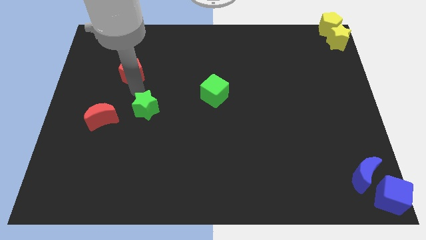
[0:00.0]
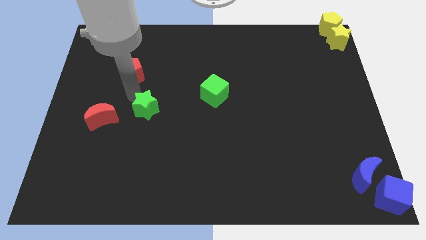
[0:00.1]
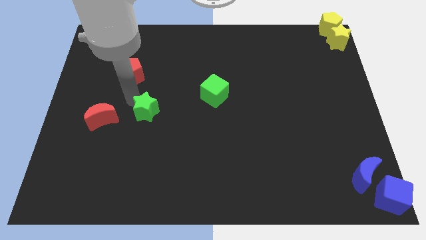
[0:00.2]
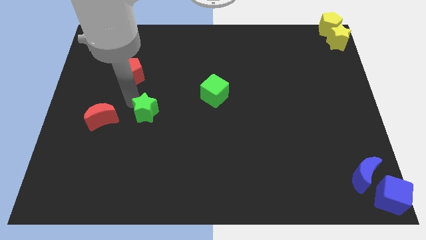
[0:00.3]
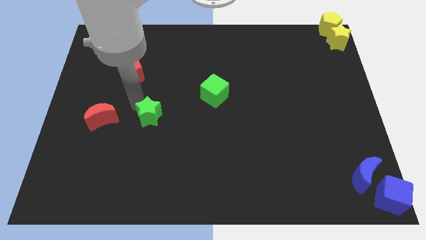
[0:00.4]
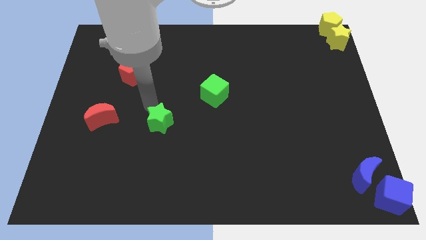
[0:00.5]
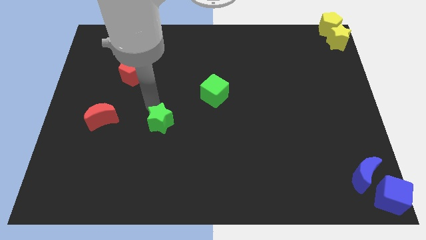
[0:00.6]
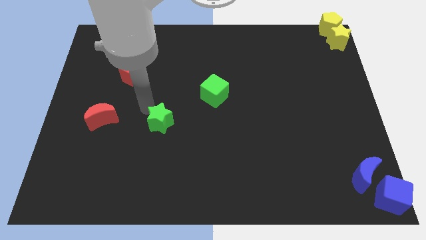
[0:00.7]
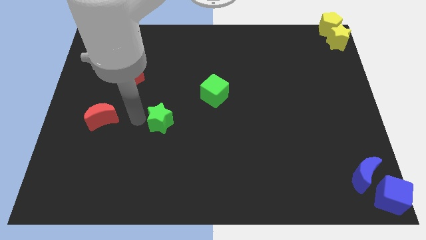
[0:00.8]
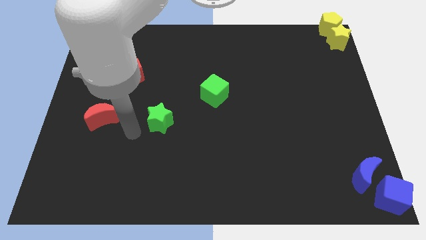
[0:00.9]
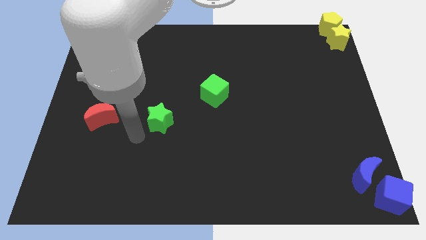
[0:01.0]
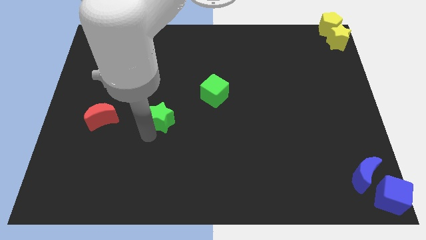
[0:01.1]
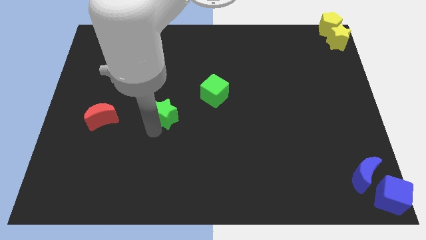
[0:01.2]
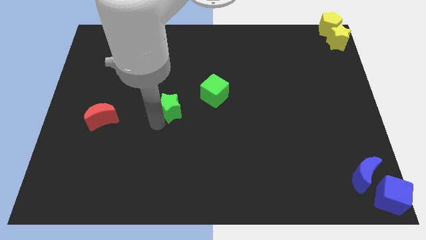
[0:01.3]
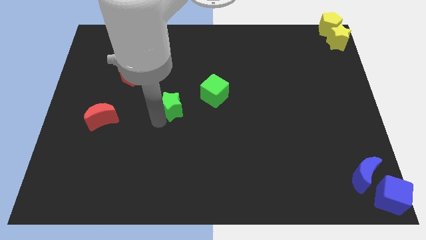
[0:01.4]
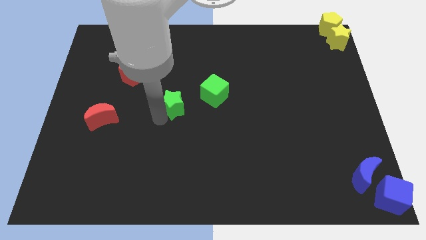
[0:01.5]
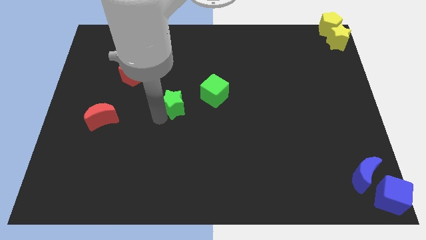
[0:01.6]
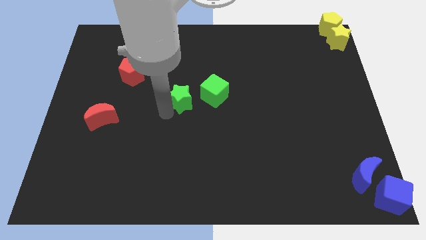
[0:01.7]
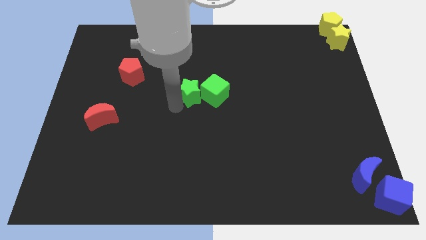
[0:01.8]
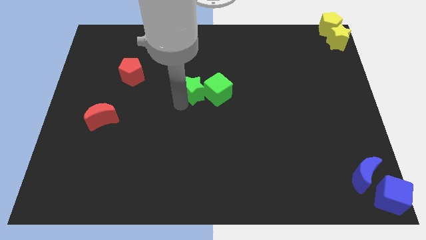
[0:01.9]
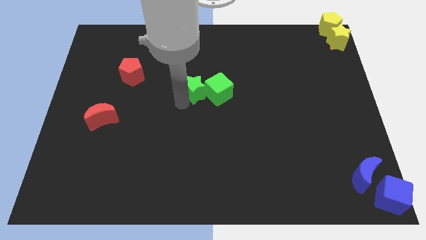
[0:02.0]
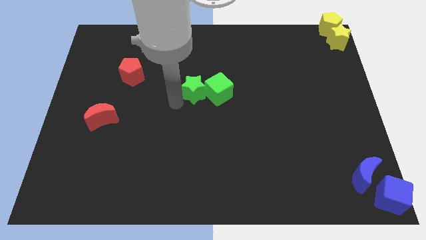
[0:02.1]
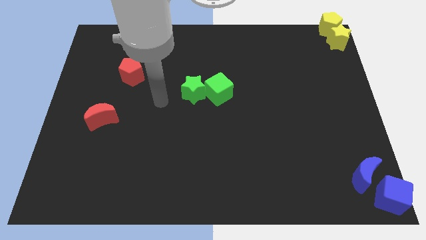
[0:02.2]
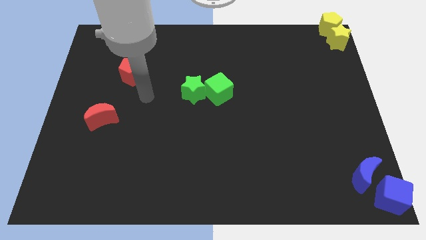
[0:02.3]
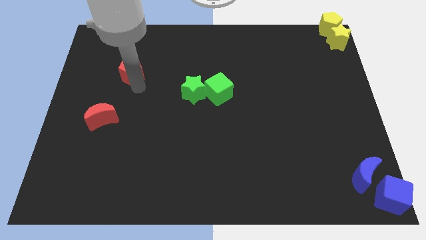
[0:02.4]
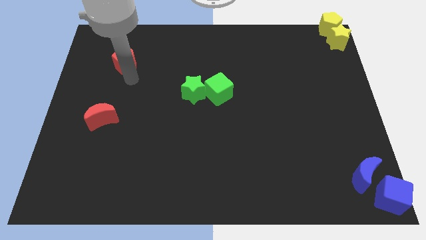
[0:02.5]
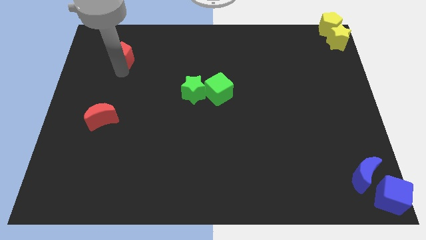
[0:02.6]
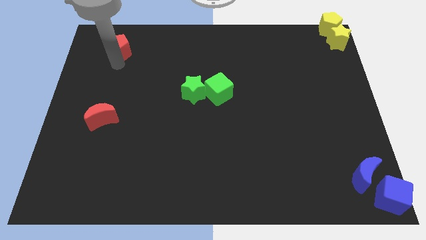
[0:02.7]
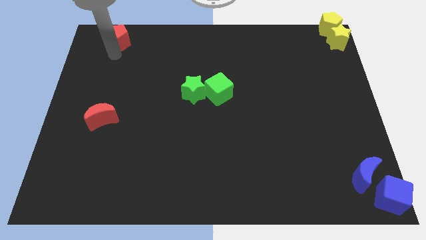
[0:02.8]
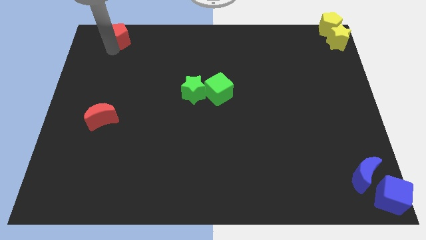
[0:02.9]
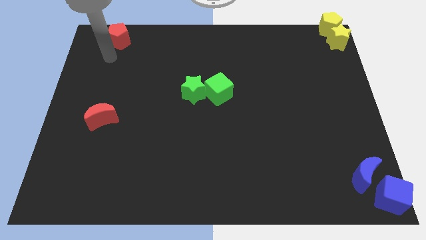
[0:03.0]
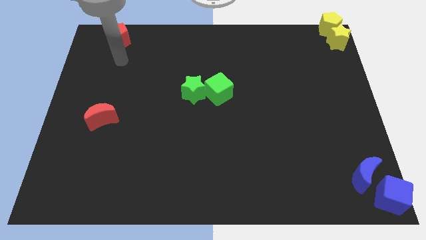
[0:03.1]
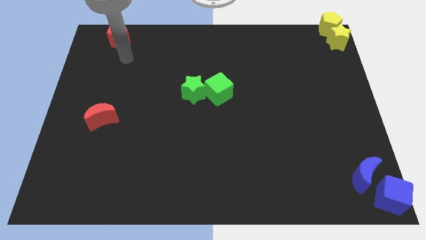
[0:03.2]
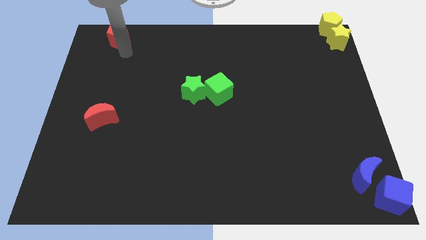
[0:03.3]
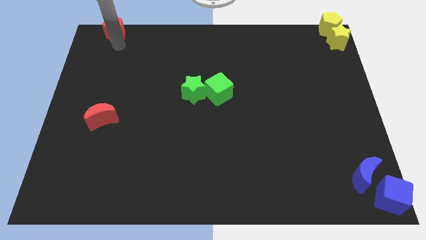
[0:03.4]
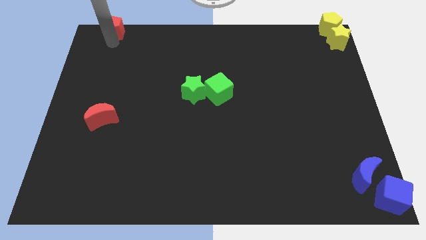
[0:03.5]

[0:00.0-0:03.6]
push red pentagon above red crescent

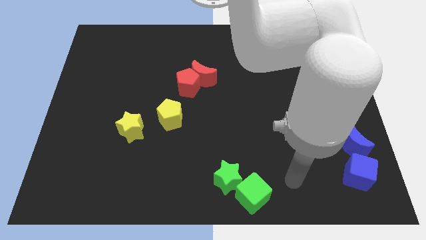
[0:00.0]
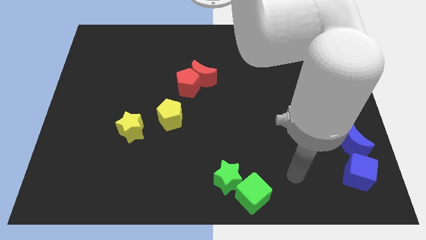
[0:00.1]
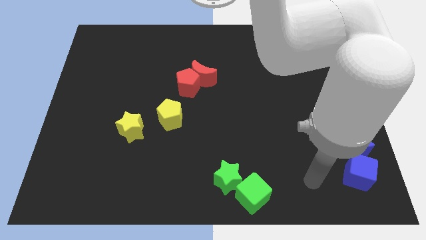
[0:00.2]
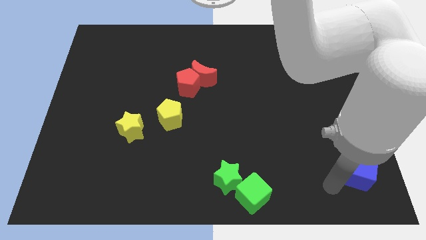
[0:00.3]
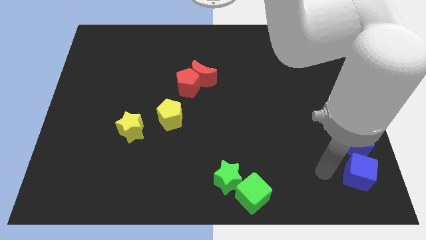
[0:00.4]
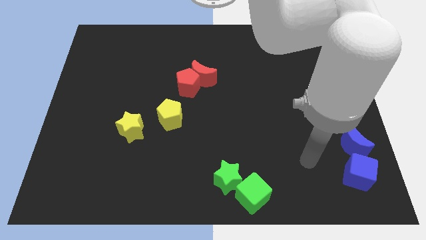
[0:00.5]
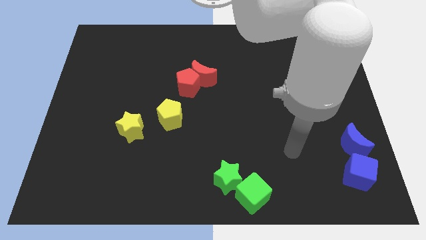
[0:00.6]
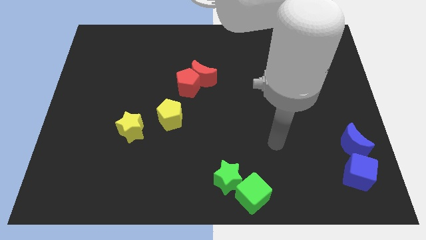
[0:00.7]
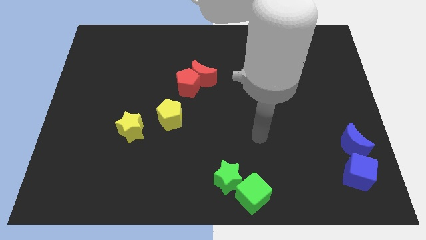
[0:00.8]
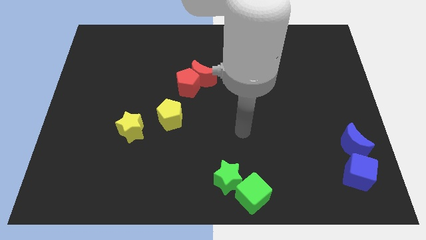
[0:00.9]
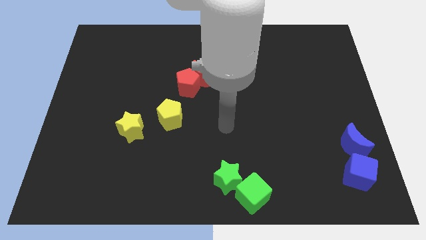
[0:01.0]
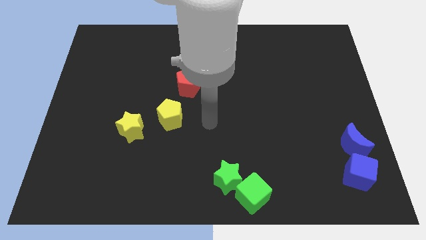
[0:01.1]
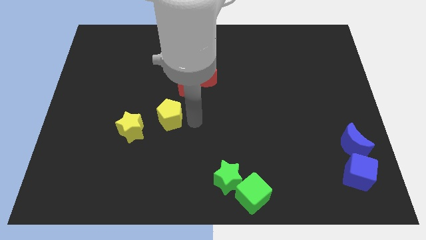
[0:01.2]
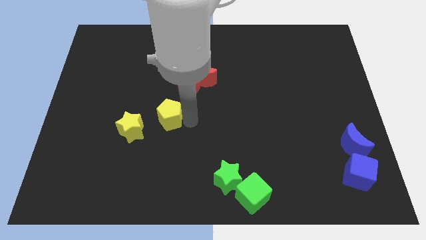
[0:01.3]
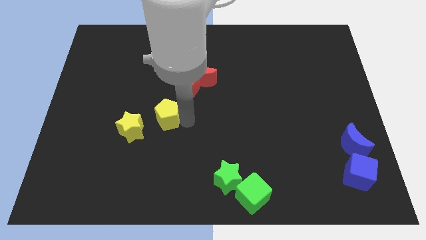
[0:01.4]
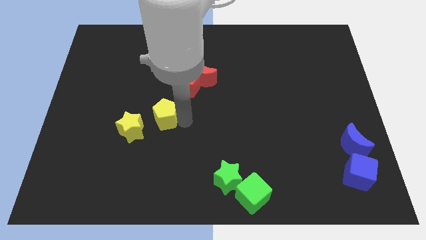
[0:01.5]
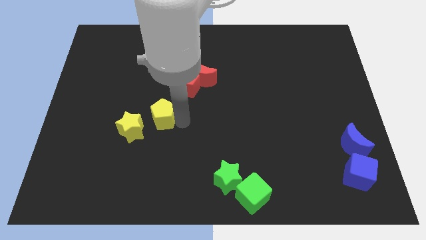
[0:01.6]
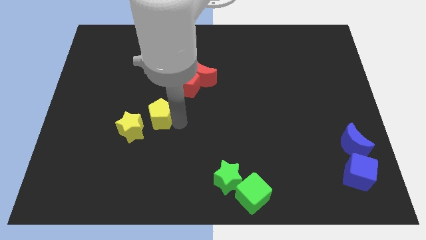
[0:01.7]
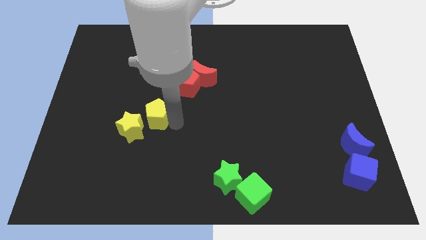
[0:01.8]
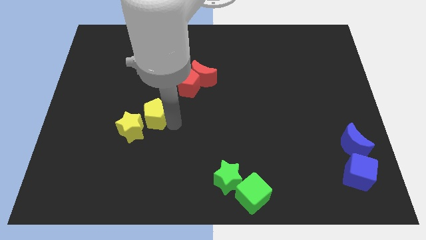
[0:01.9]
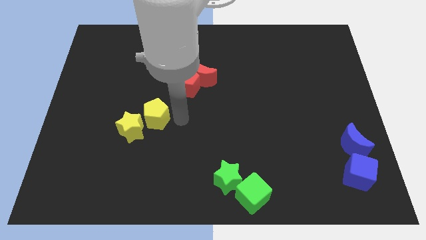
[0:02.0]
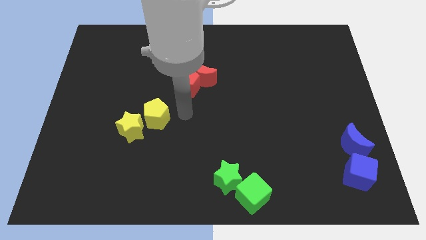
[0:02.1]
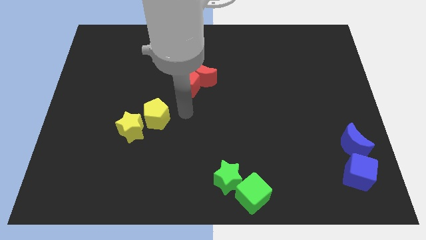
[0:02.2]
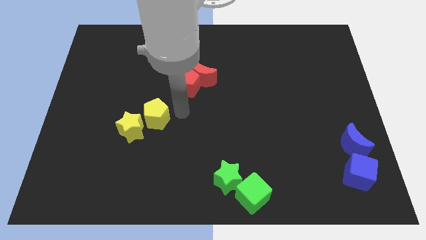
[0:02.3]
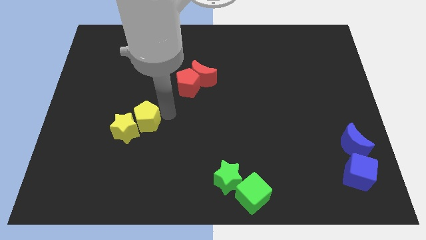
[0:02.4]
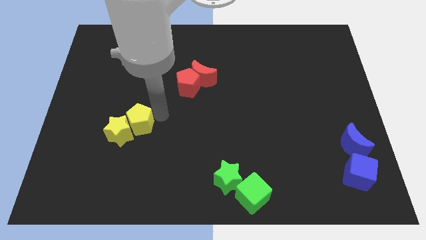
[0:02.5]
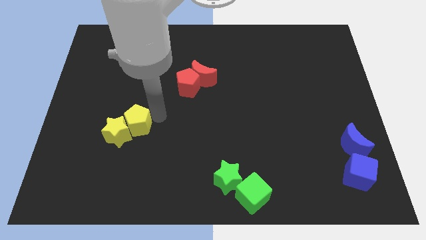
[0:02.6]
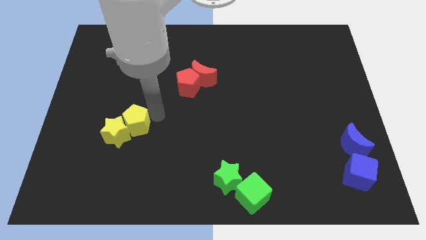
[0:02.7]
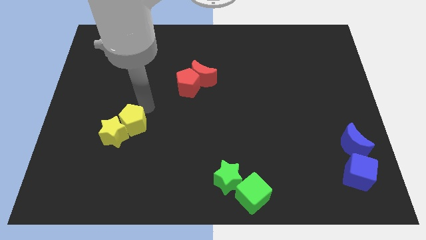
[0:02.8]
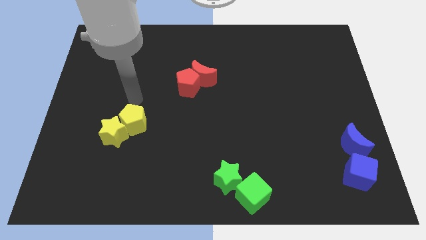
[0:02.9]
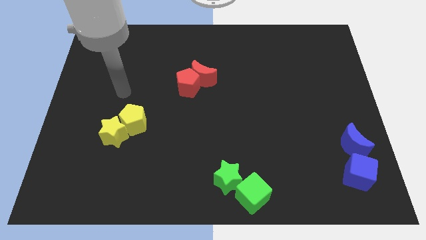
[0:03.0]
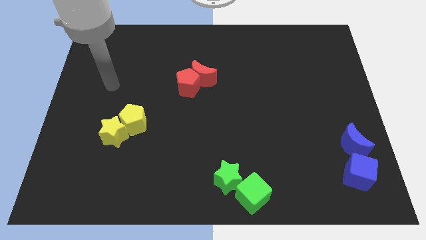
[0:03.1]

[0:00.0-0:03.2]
push yellow pentagon into yellow star

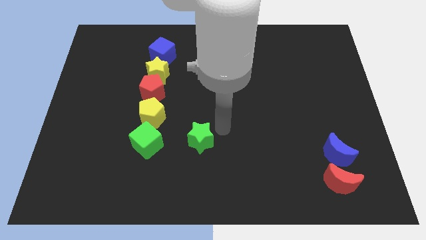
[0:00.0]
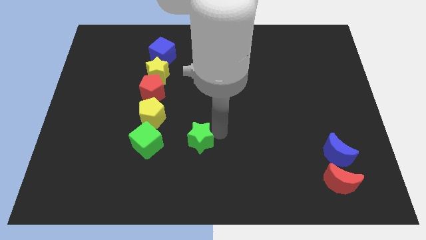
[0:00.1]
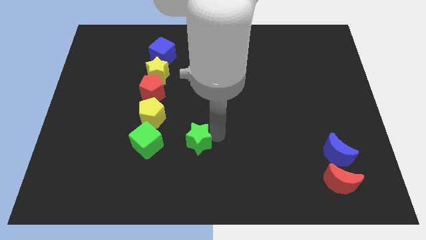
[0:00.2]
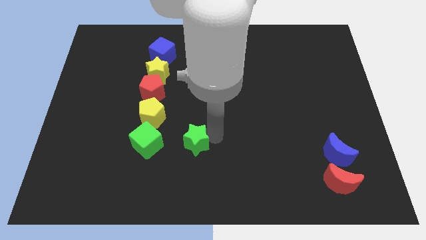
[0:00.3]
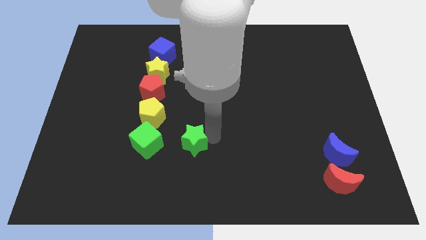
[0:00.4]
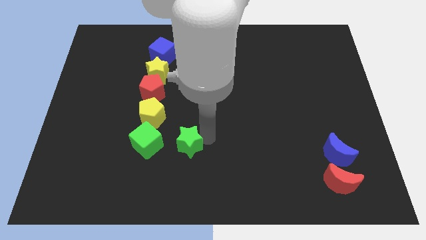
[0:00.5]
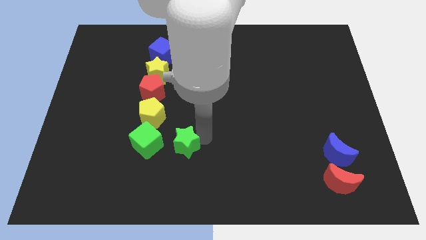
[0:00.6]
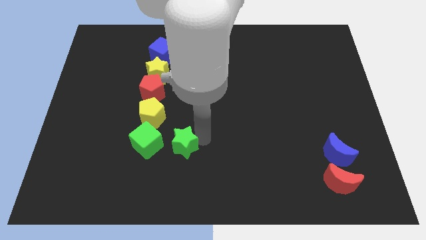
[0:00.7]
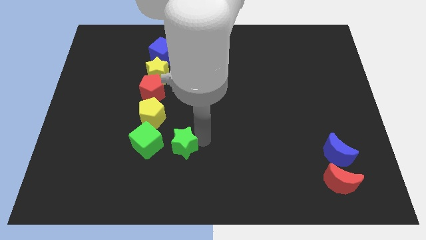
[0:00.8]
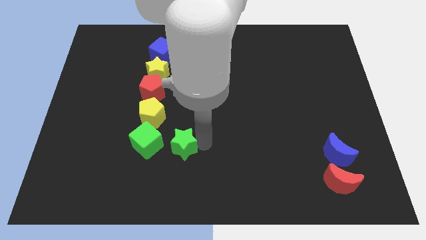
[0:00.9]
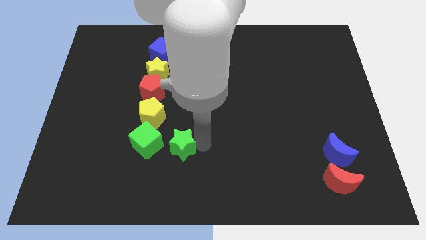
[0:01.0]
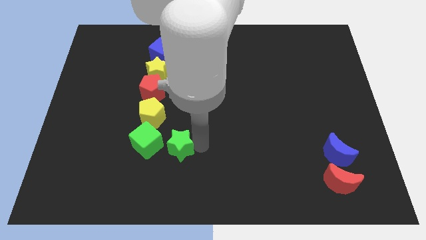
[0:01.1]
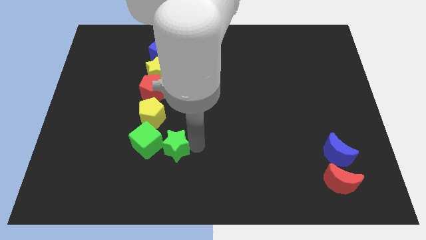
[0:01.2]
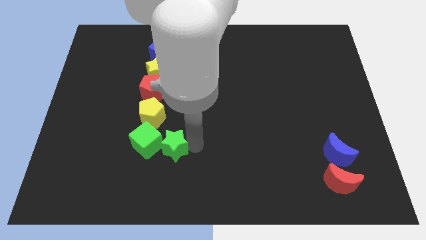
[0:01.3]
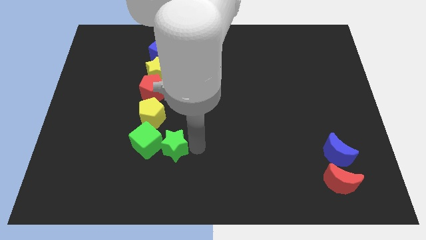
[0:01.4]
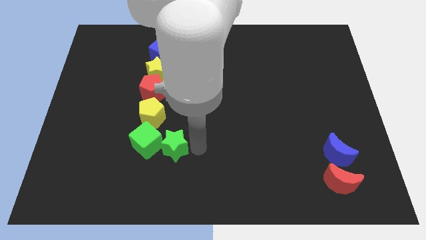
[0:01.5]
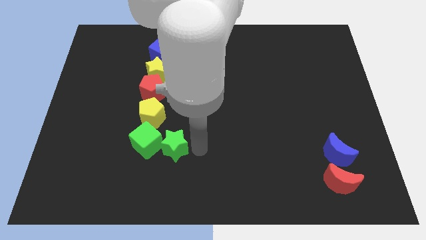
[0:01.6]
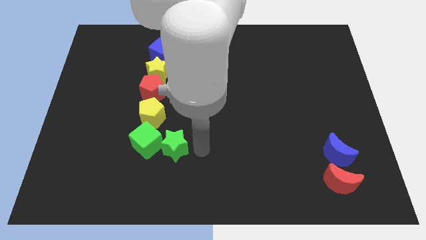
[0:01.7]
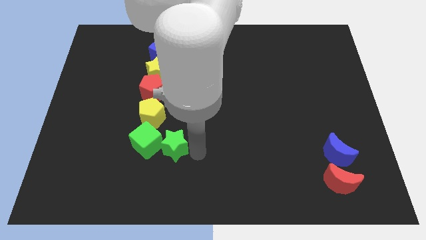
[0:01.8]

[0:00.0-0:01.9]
push the green star into the green cube

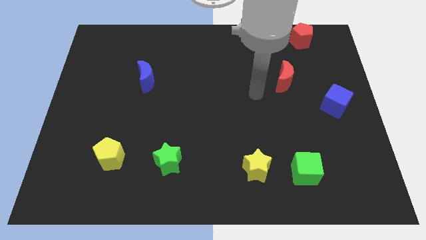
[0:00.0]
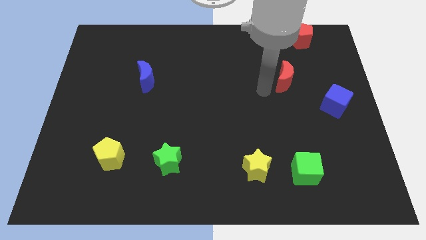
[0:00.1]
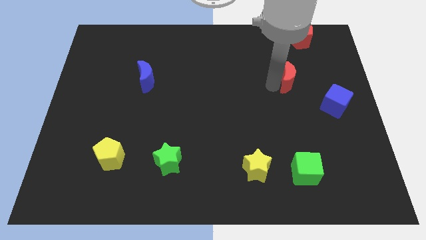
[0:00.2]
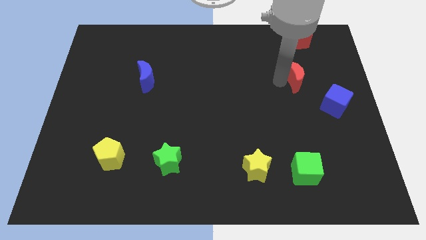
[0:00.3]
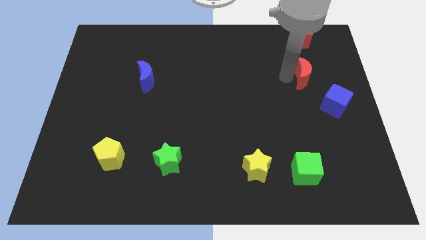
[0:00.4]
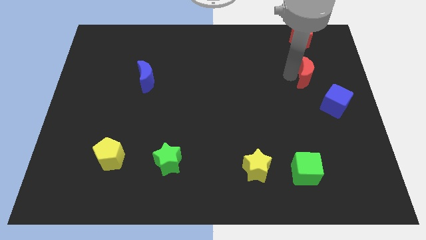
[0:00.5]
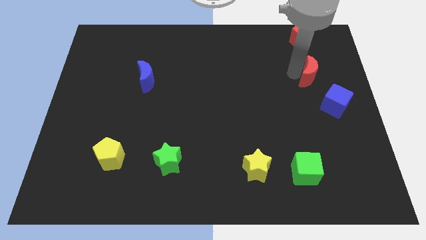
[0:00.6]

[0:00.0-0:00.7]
move the red crescent below the red pentagon
